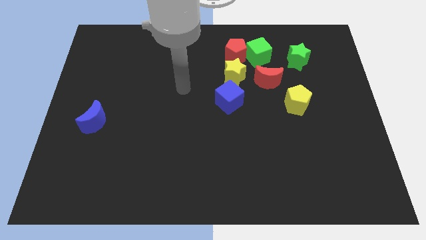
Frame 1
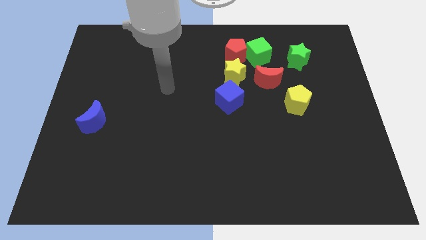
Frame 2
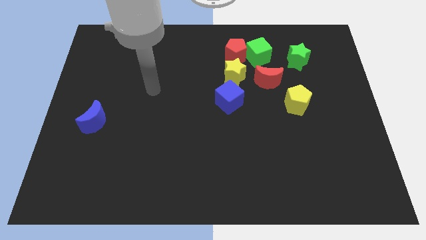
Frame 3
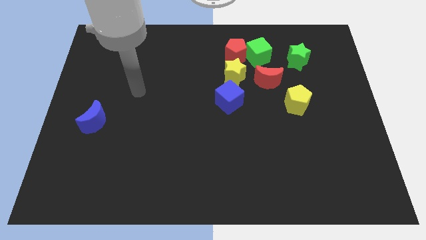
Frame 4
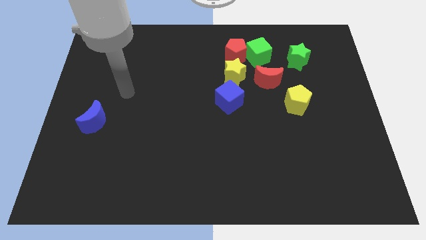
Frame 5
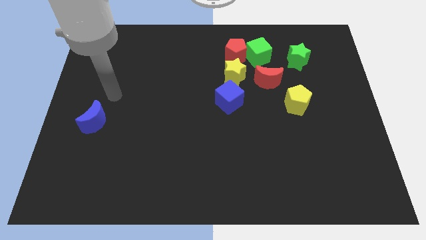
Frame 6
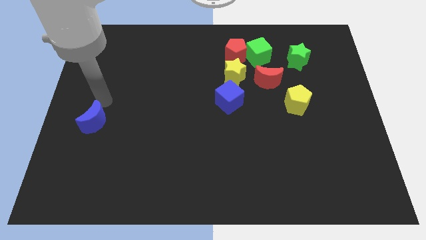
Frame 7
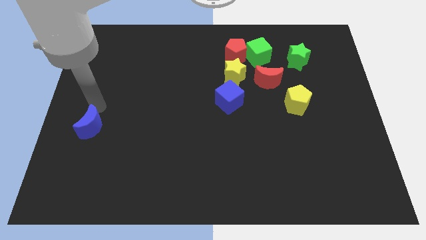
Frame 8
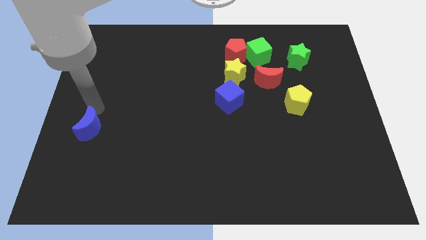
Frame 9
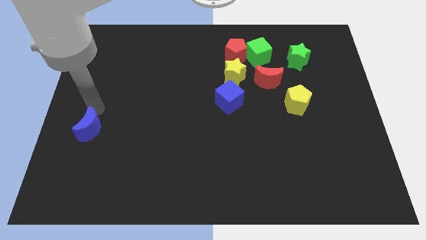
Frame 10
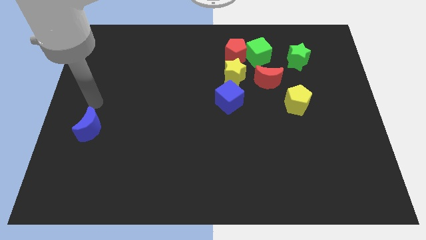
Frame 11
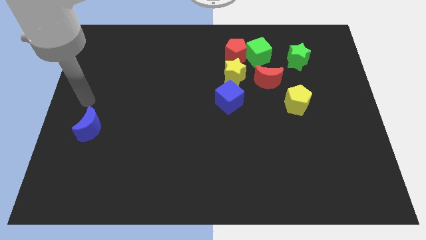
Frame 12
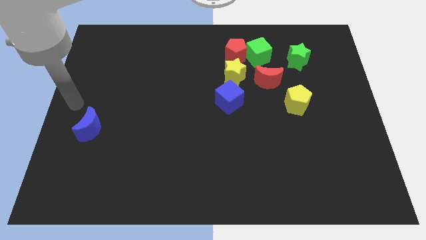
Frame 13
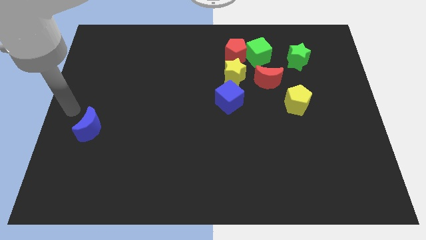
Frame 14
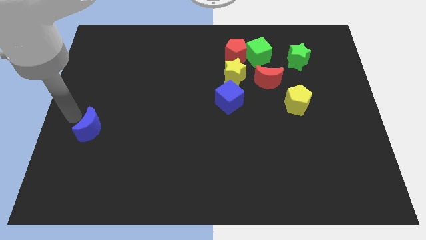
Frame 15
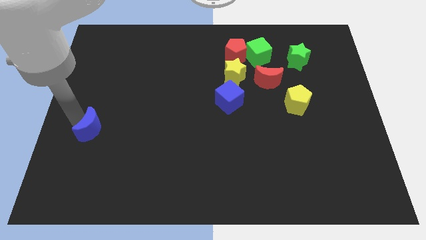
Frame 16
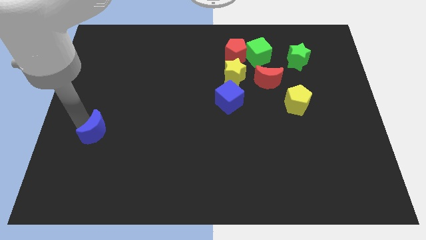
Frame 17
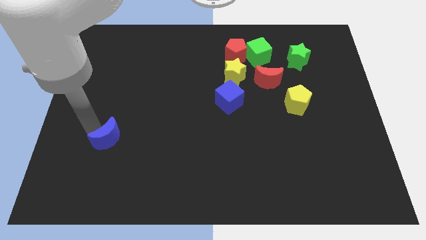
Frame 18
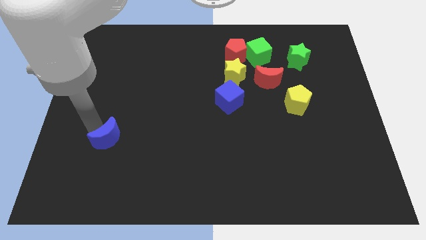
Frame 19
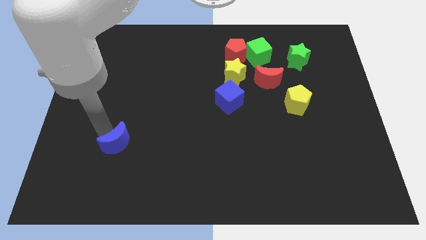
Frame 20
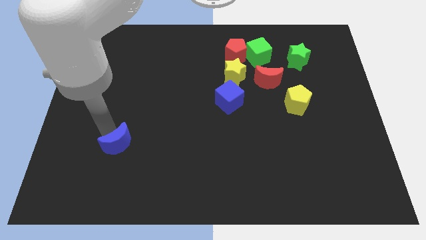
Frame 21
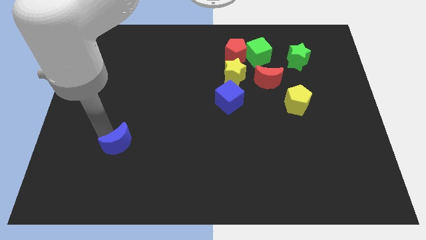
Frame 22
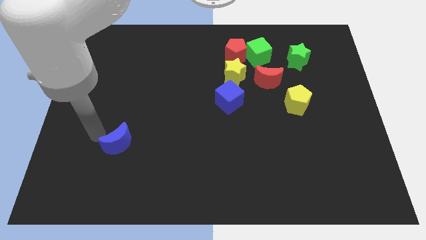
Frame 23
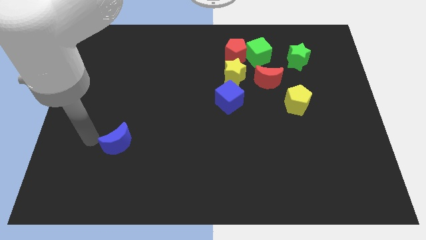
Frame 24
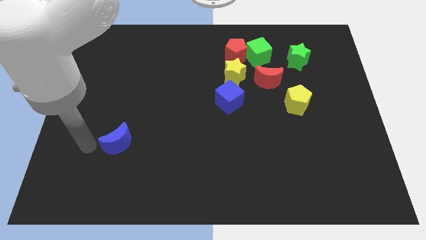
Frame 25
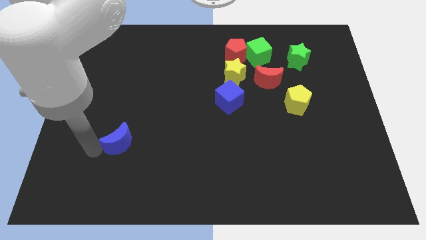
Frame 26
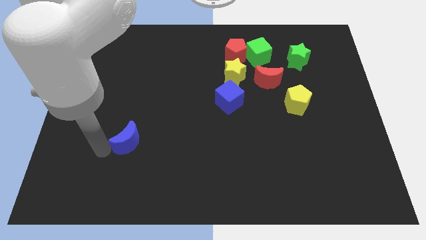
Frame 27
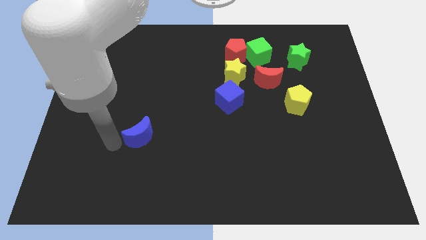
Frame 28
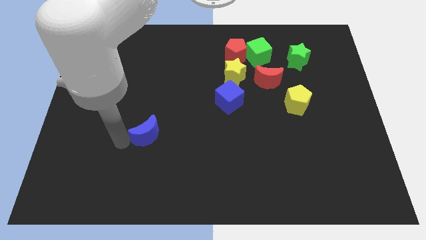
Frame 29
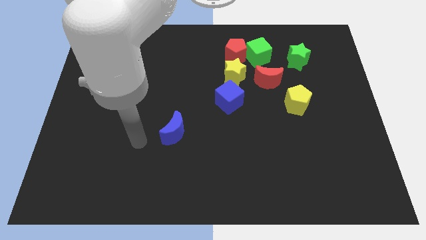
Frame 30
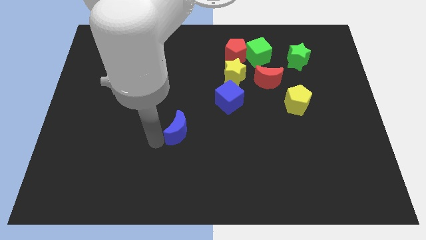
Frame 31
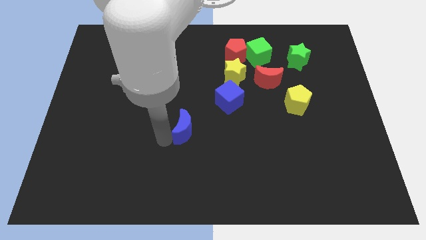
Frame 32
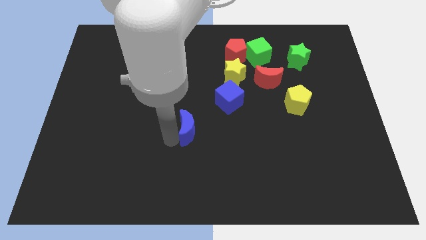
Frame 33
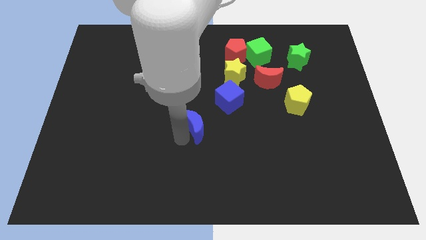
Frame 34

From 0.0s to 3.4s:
push the blue crescent to the right

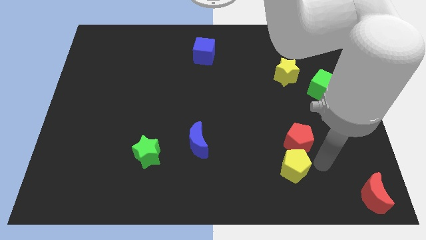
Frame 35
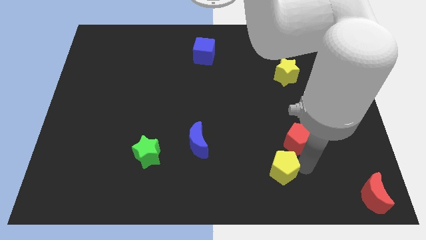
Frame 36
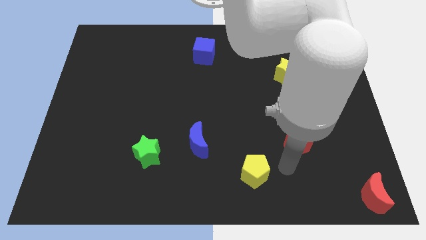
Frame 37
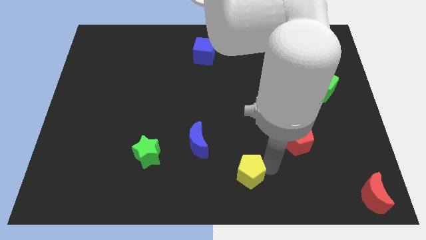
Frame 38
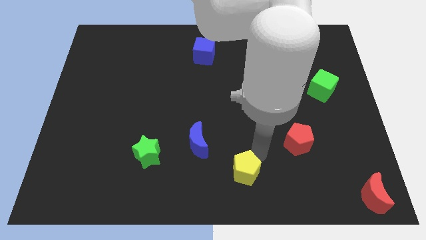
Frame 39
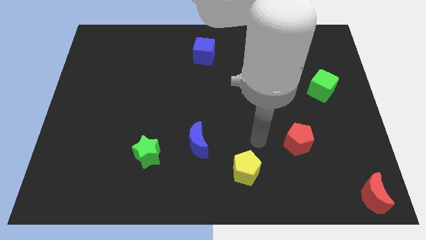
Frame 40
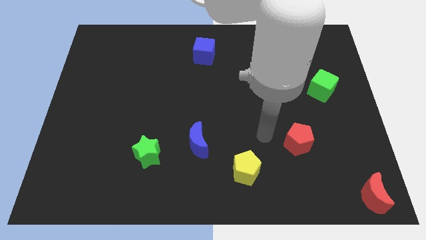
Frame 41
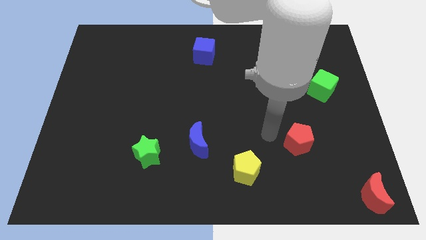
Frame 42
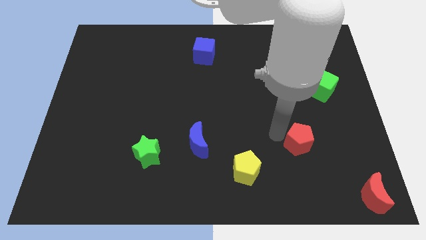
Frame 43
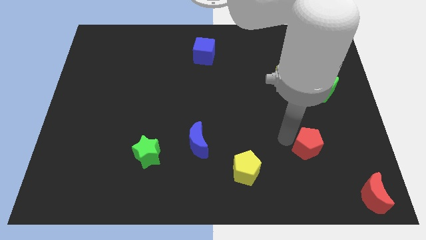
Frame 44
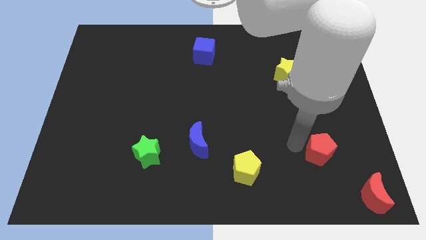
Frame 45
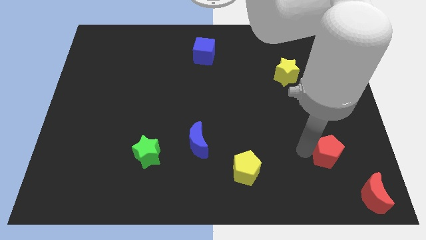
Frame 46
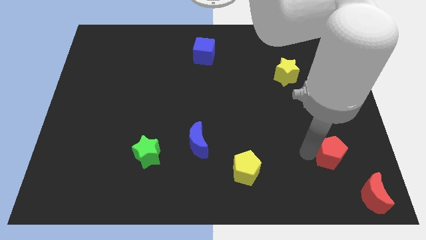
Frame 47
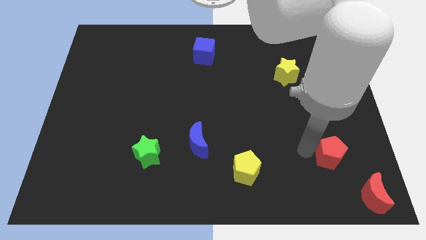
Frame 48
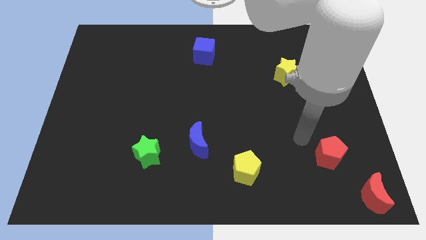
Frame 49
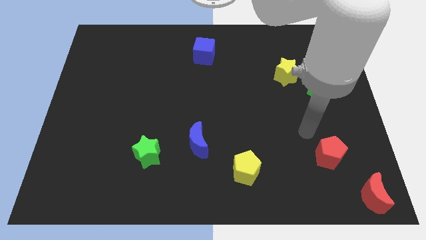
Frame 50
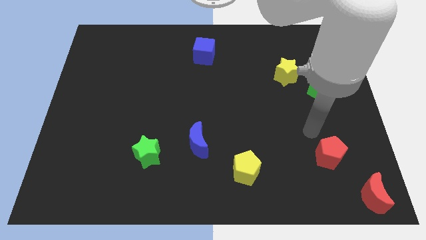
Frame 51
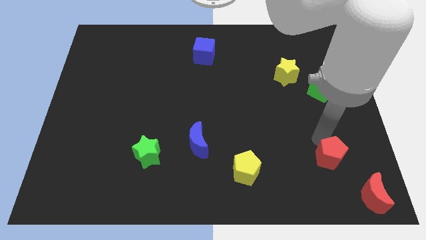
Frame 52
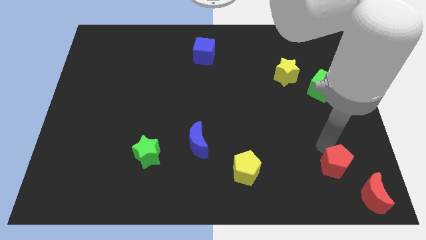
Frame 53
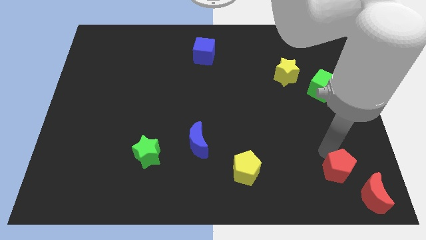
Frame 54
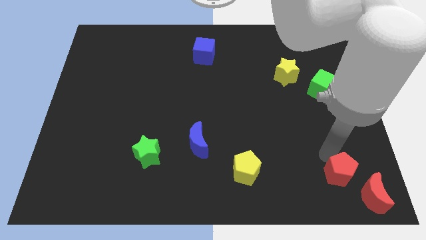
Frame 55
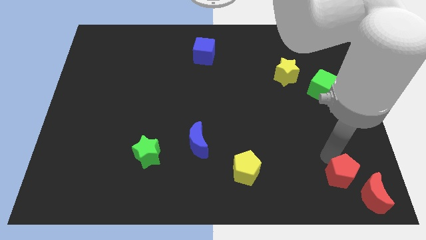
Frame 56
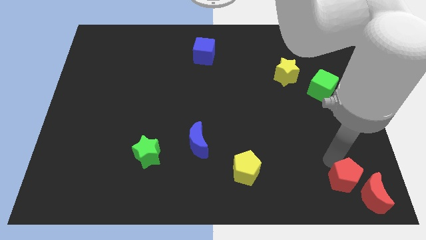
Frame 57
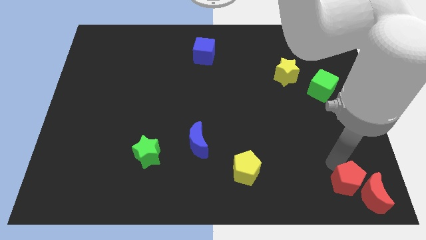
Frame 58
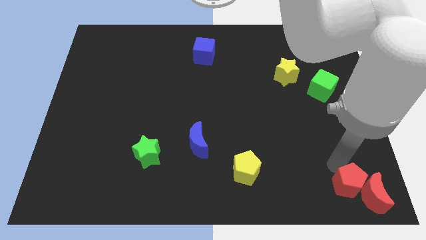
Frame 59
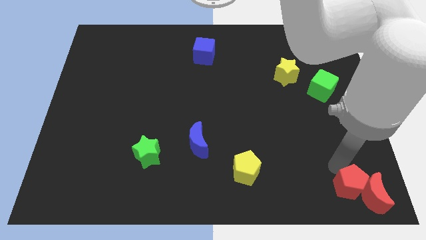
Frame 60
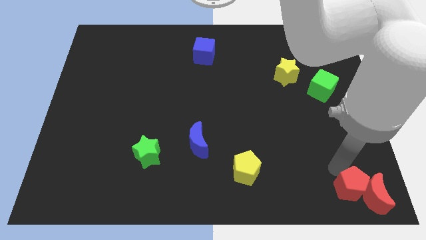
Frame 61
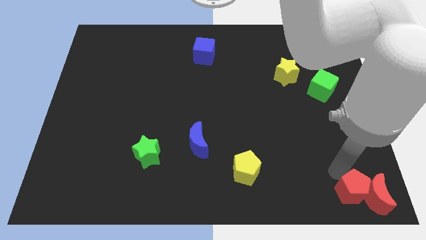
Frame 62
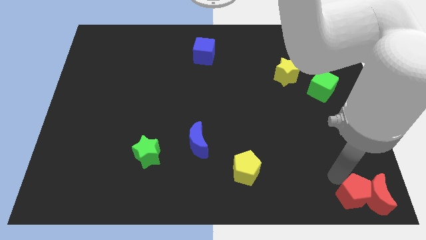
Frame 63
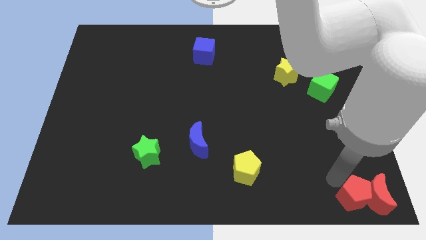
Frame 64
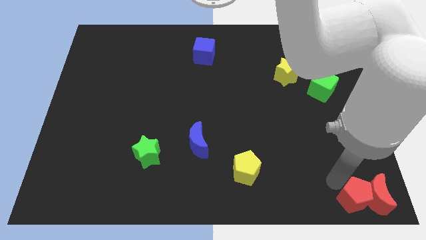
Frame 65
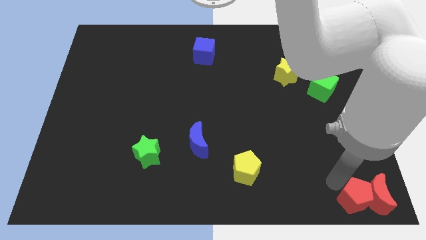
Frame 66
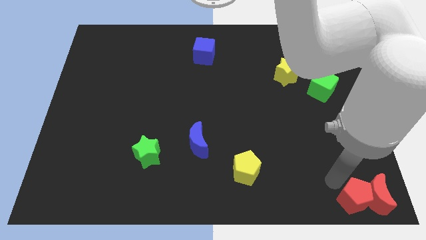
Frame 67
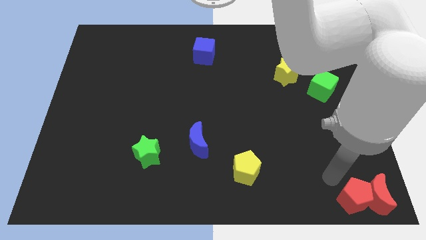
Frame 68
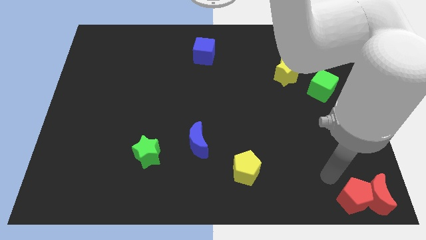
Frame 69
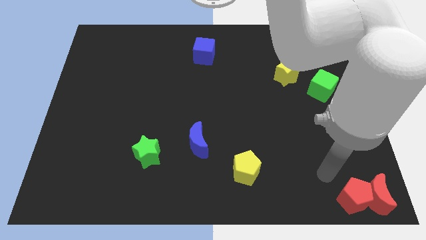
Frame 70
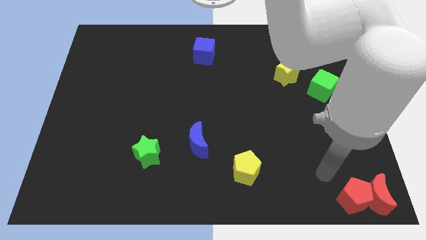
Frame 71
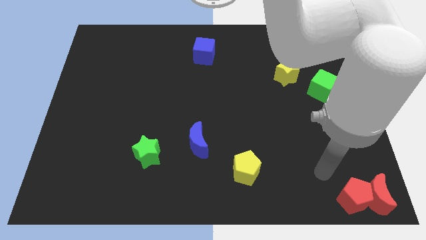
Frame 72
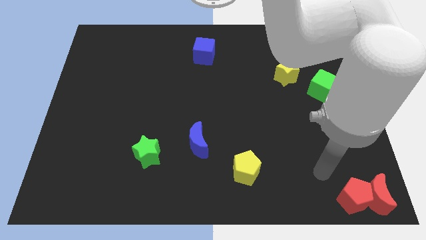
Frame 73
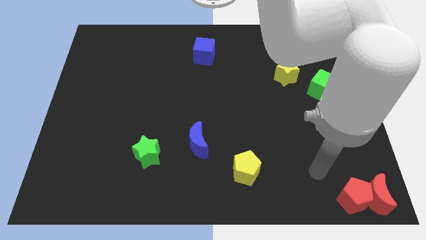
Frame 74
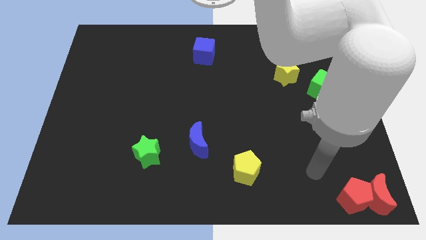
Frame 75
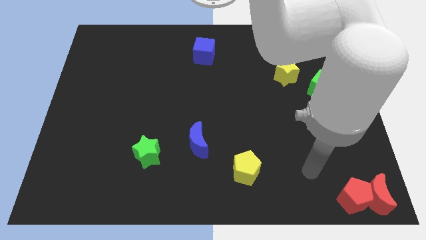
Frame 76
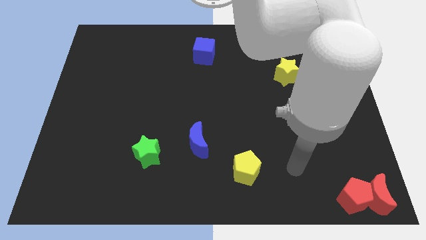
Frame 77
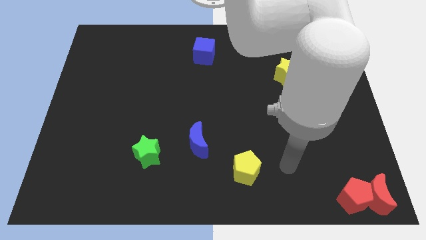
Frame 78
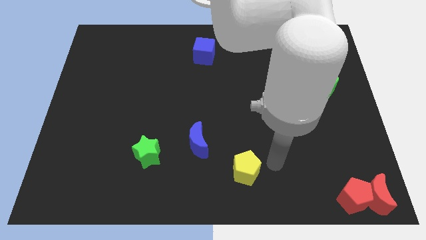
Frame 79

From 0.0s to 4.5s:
separate the red and yellow pentagons

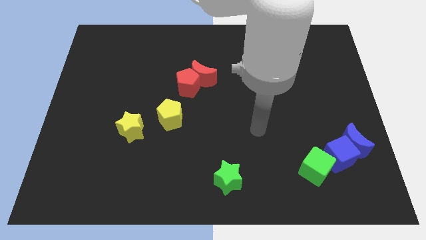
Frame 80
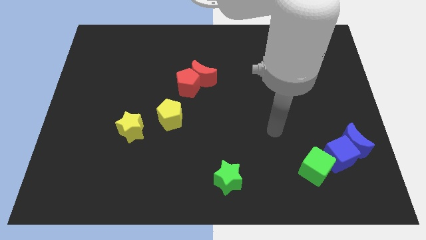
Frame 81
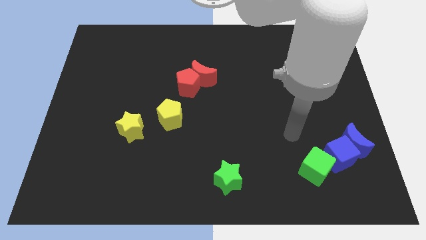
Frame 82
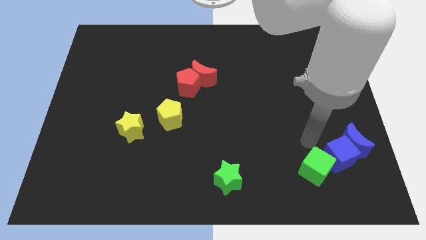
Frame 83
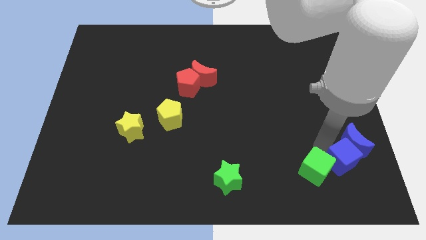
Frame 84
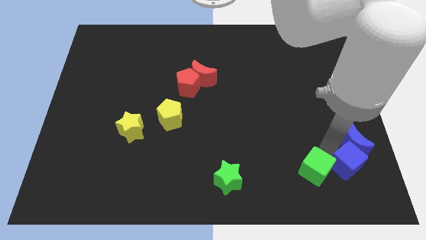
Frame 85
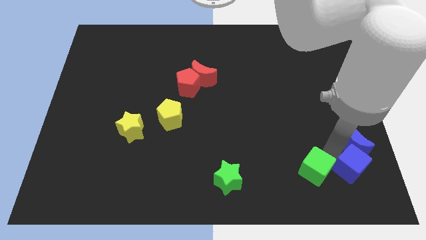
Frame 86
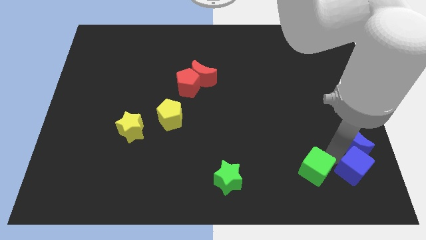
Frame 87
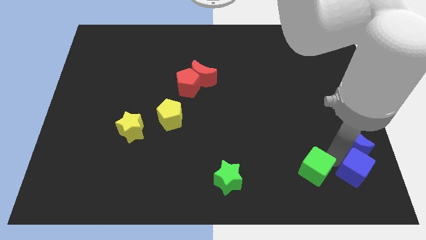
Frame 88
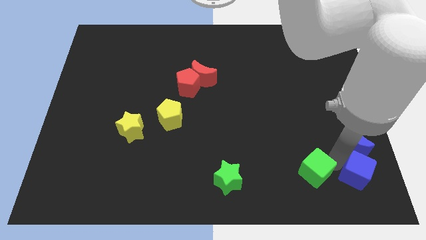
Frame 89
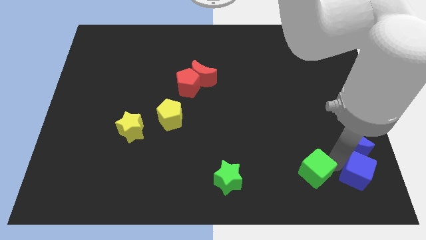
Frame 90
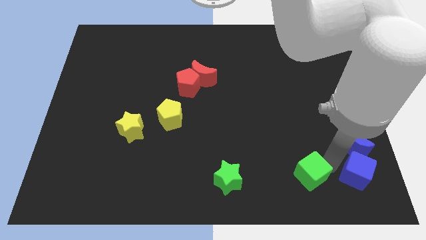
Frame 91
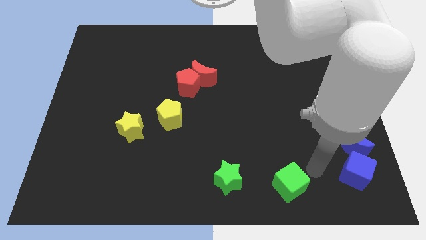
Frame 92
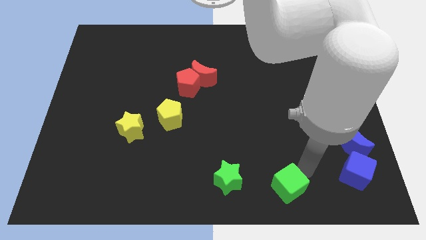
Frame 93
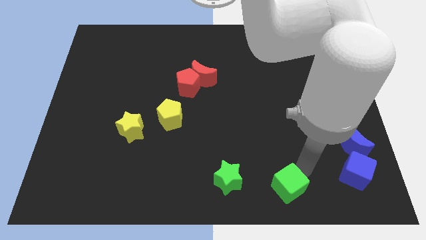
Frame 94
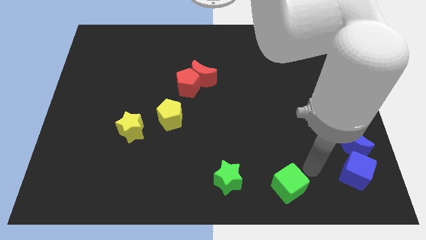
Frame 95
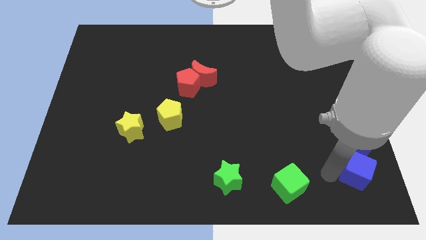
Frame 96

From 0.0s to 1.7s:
separate the green and blue cubes
